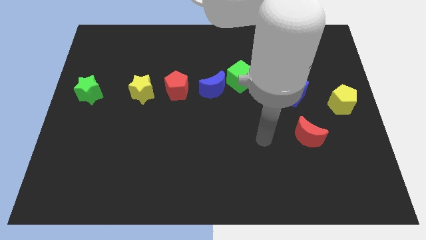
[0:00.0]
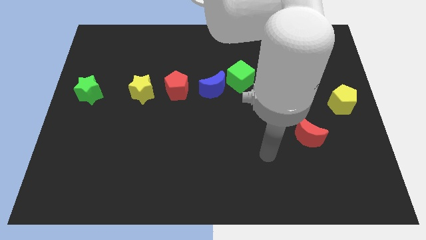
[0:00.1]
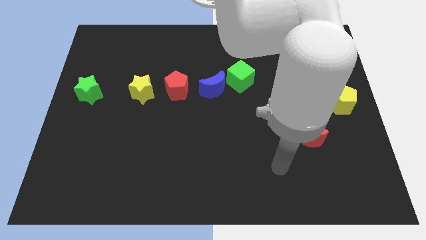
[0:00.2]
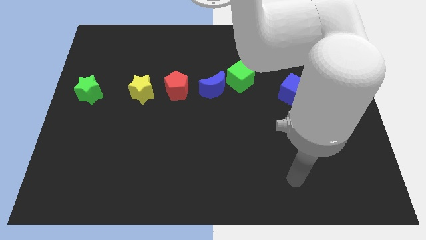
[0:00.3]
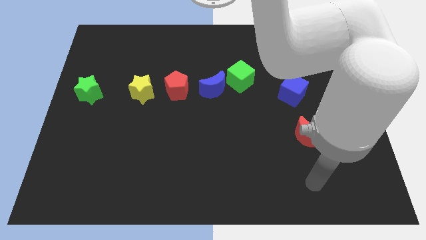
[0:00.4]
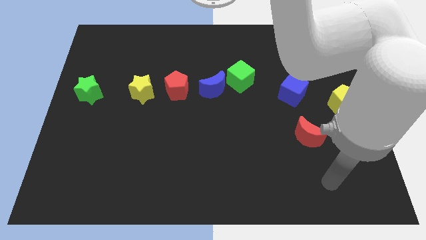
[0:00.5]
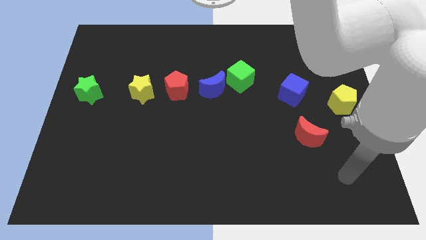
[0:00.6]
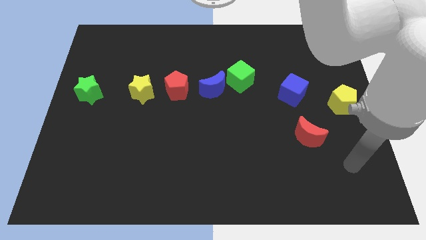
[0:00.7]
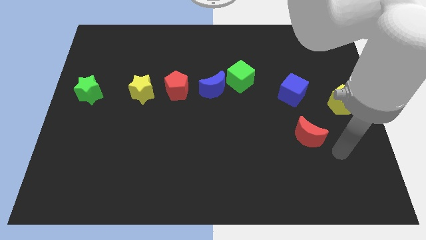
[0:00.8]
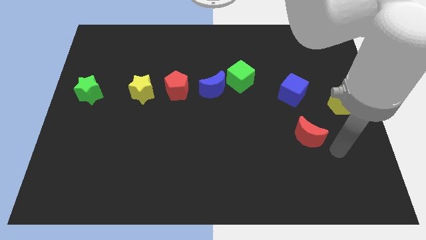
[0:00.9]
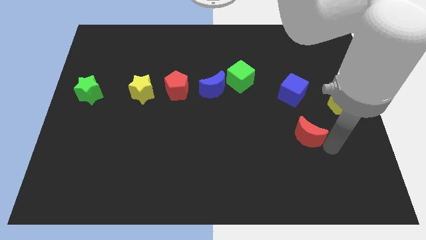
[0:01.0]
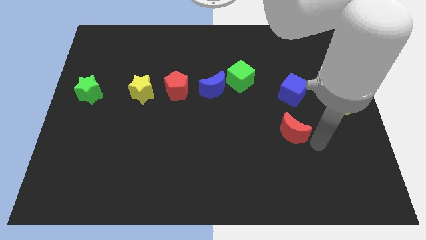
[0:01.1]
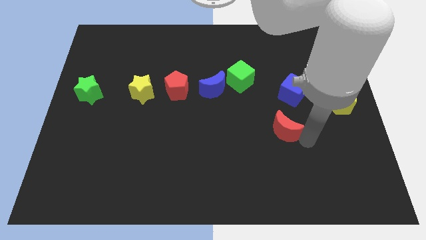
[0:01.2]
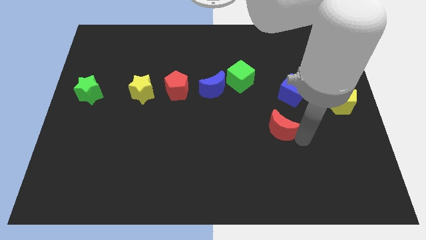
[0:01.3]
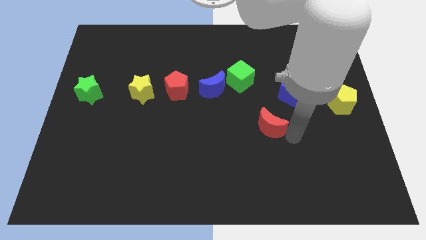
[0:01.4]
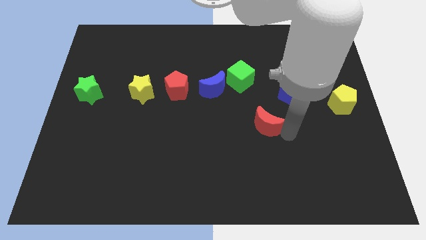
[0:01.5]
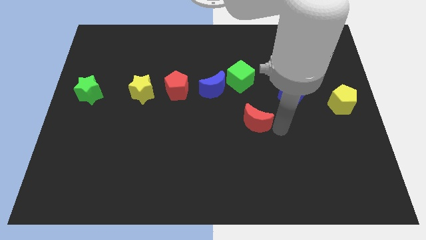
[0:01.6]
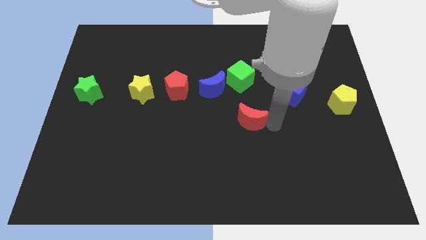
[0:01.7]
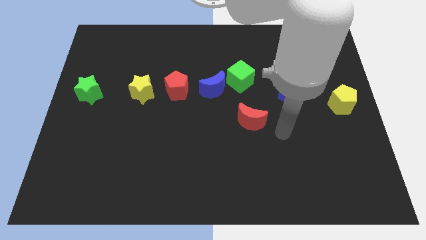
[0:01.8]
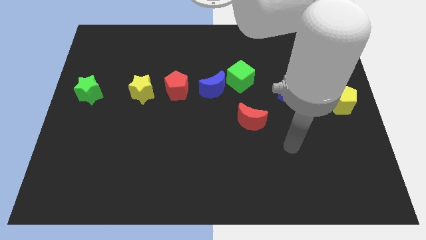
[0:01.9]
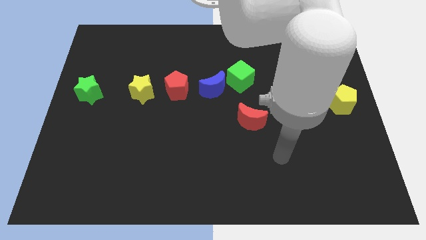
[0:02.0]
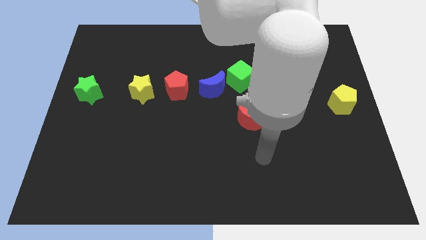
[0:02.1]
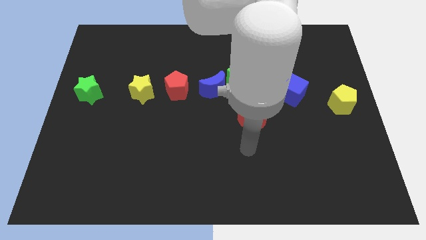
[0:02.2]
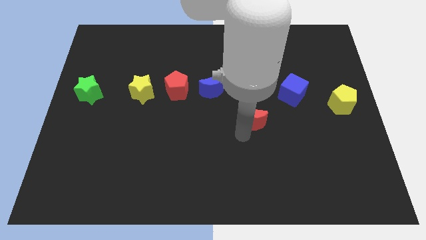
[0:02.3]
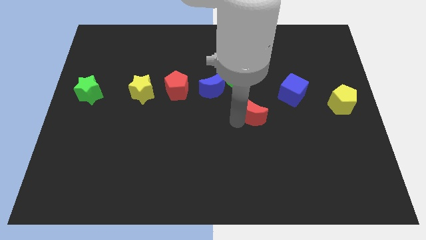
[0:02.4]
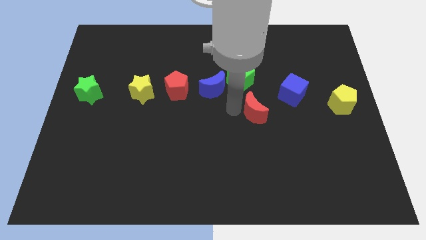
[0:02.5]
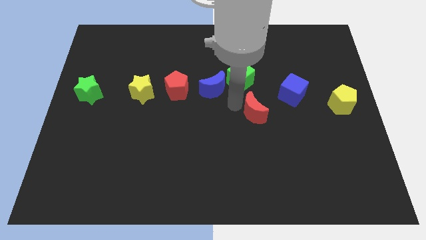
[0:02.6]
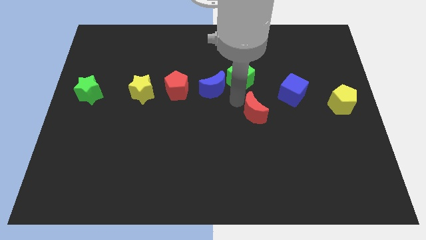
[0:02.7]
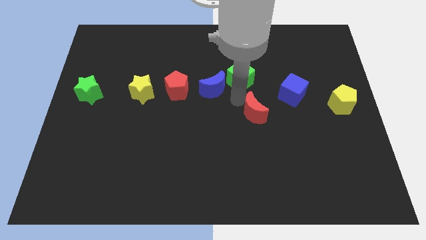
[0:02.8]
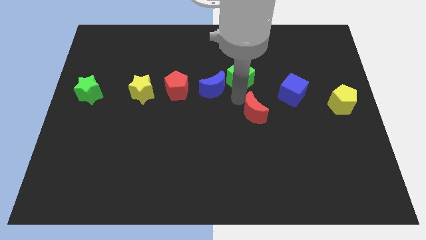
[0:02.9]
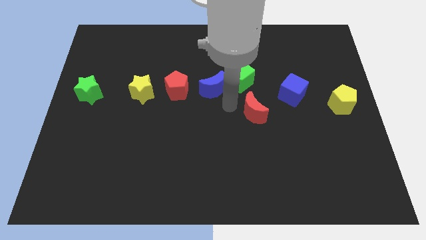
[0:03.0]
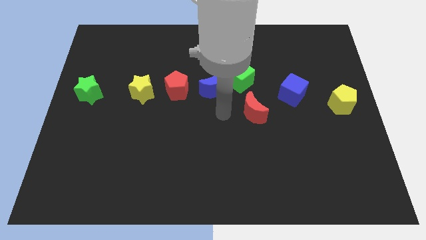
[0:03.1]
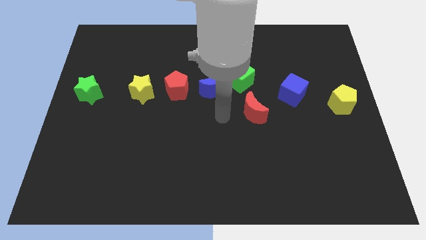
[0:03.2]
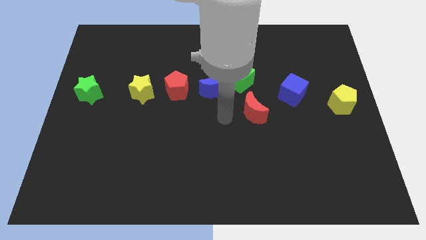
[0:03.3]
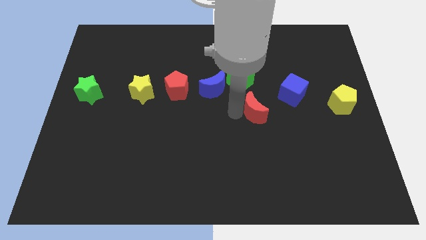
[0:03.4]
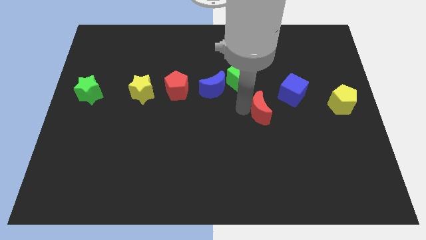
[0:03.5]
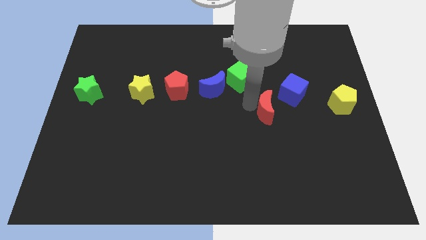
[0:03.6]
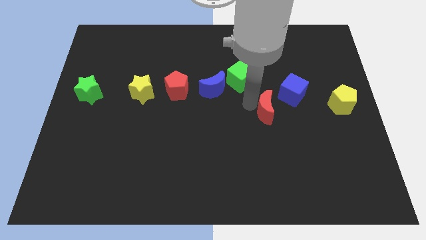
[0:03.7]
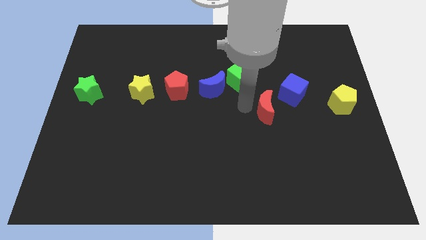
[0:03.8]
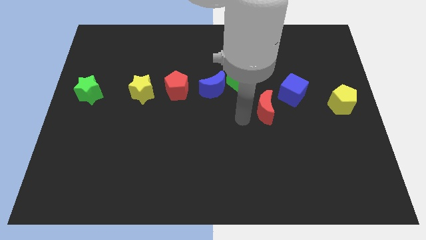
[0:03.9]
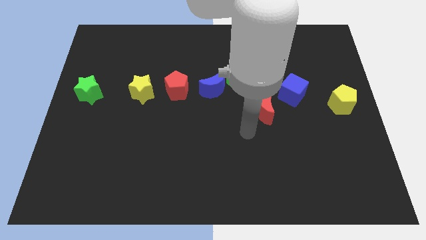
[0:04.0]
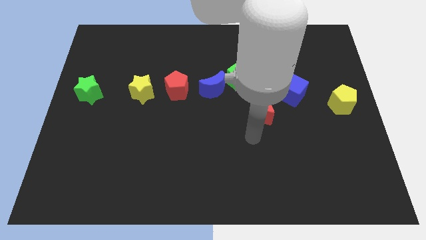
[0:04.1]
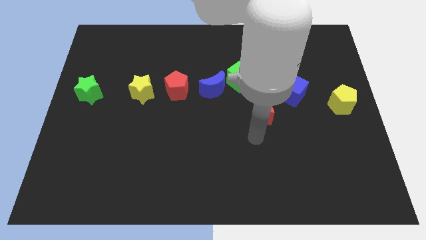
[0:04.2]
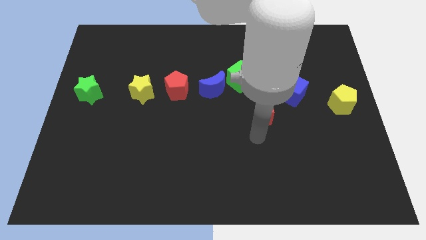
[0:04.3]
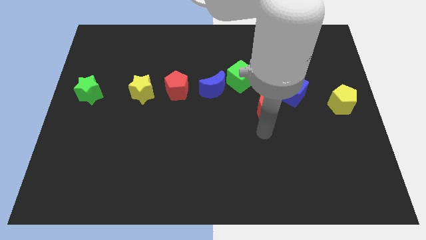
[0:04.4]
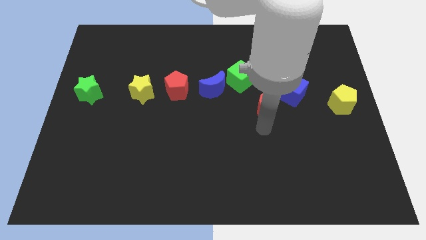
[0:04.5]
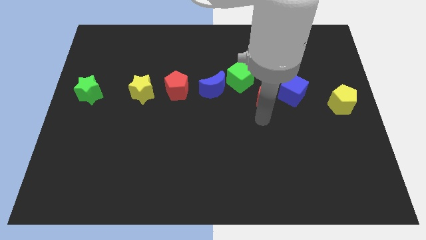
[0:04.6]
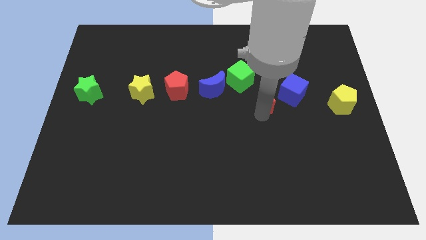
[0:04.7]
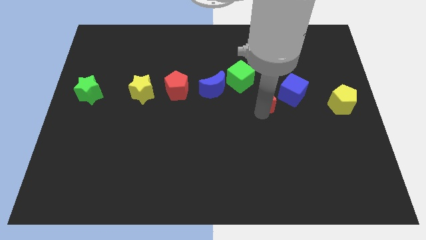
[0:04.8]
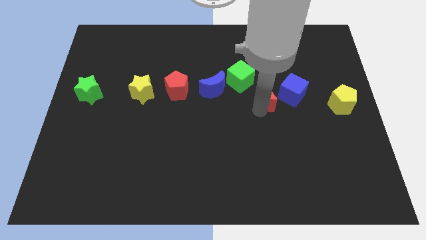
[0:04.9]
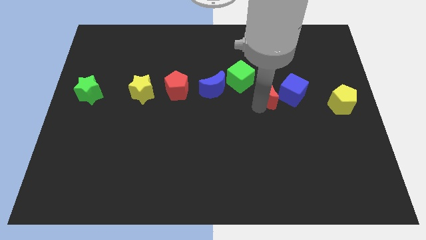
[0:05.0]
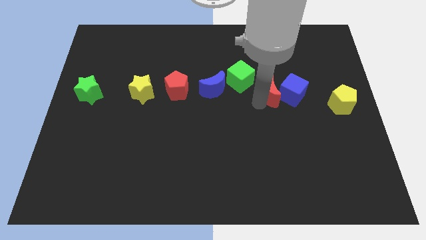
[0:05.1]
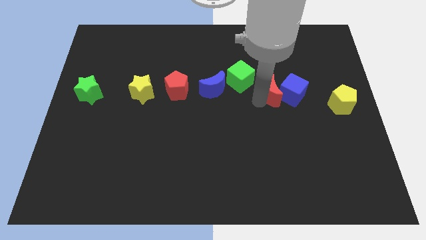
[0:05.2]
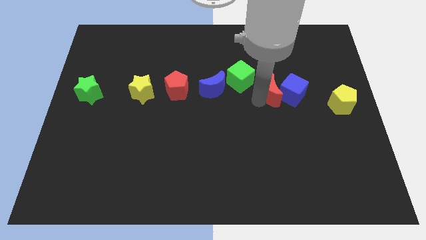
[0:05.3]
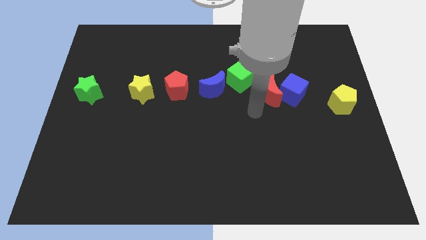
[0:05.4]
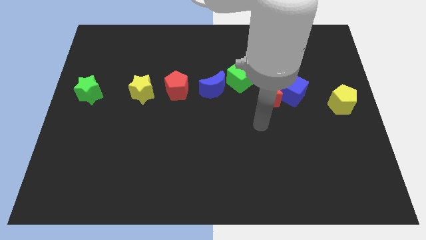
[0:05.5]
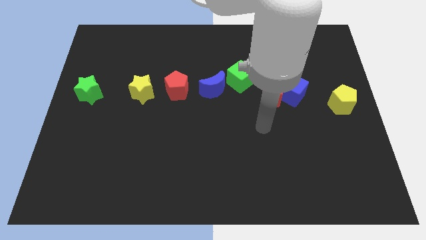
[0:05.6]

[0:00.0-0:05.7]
move the red crescent to the left of the blue cube

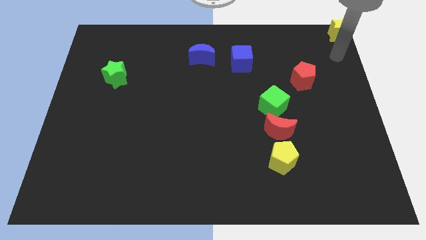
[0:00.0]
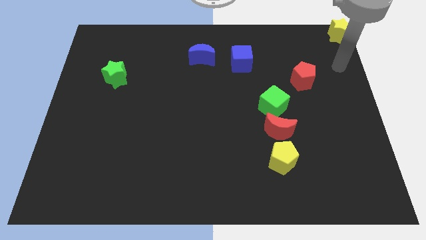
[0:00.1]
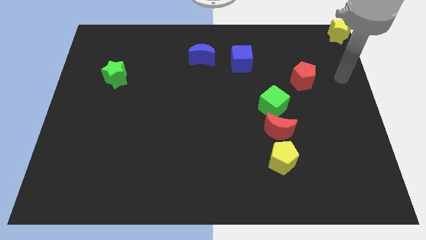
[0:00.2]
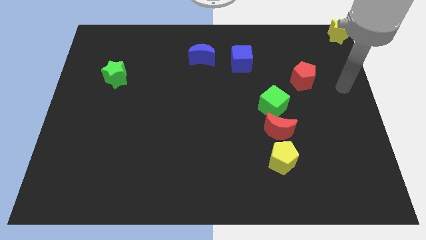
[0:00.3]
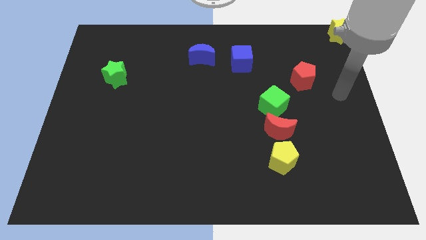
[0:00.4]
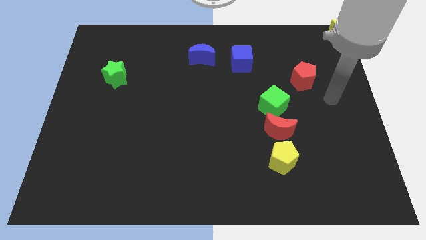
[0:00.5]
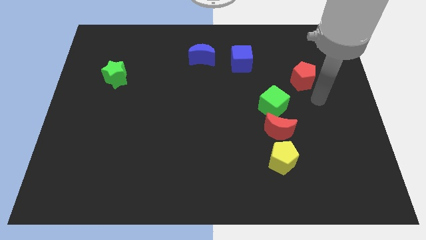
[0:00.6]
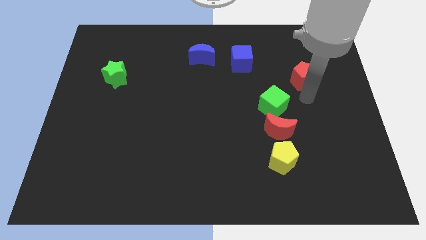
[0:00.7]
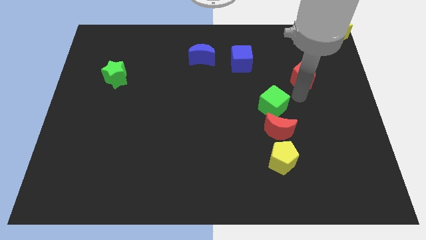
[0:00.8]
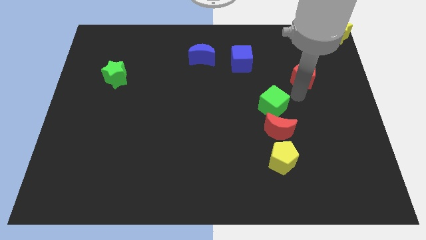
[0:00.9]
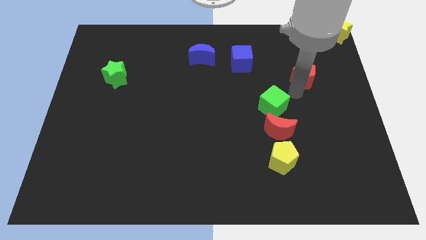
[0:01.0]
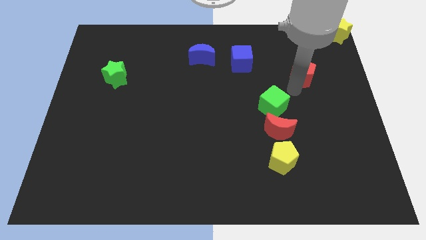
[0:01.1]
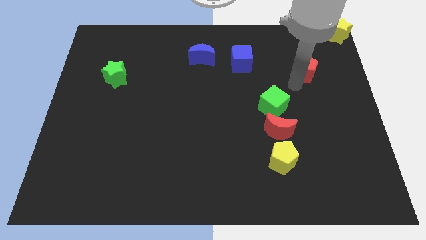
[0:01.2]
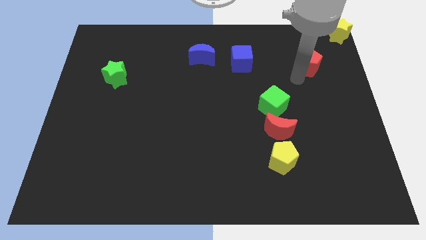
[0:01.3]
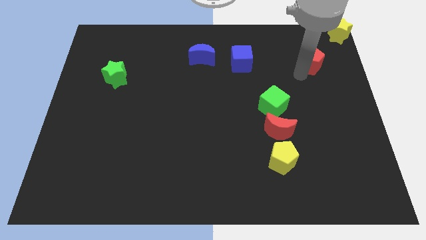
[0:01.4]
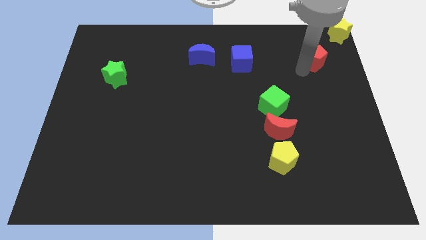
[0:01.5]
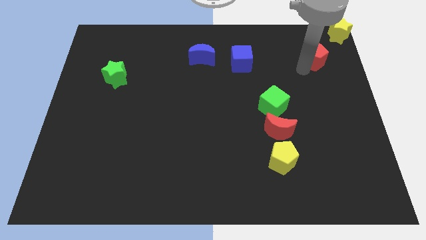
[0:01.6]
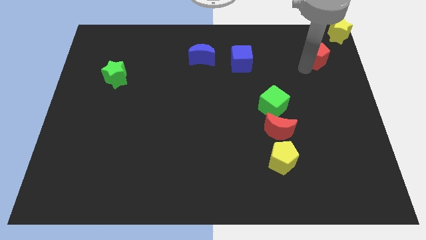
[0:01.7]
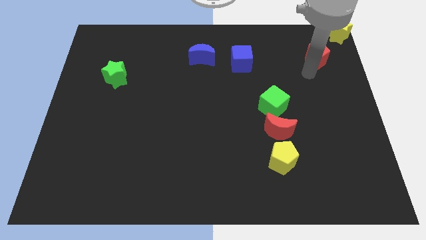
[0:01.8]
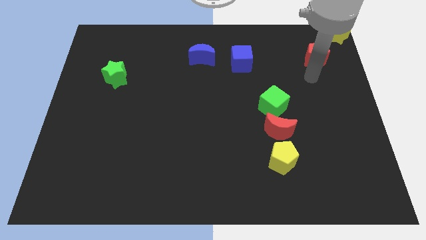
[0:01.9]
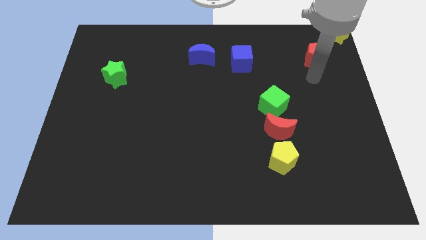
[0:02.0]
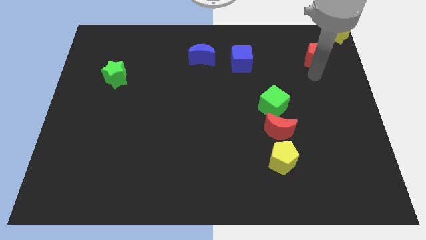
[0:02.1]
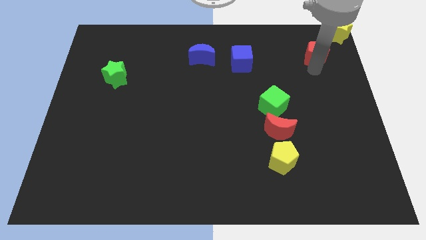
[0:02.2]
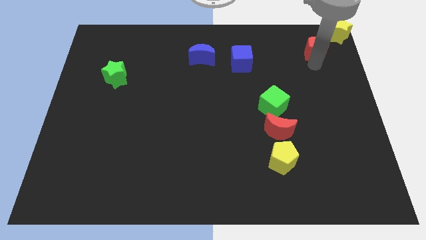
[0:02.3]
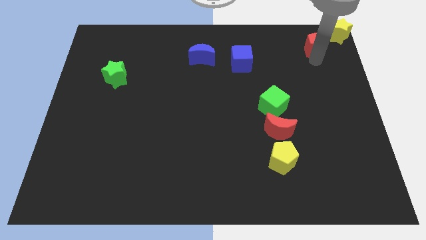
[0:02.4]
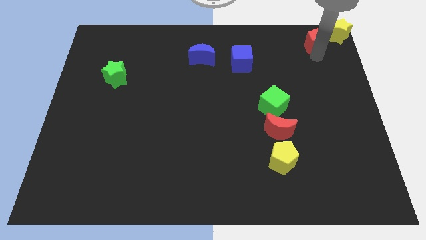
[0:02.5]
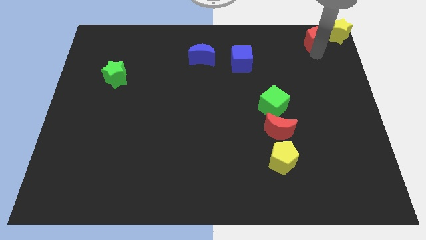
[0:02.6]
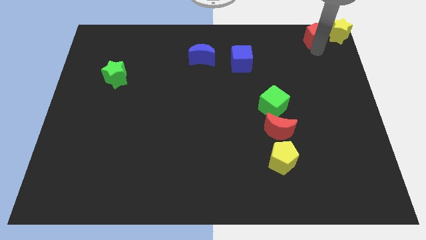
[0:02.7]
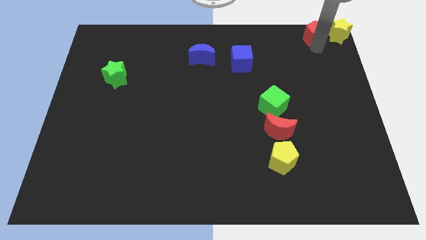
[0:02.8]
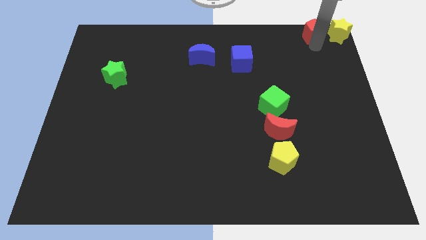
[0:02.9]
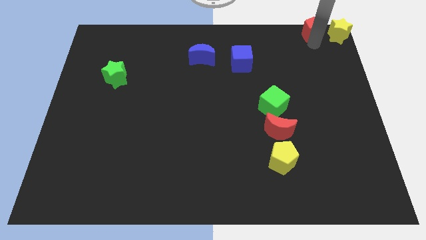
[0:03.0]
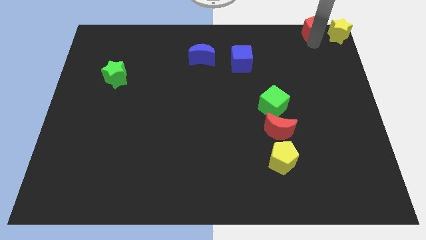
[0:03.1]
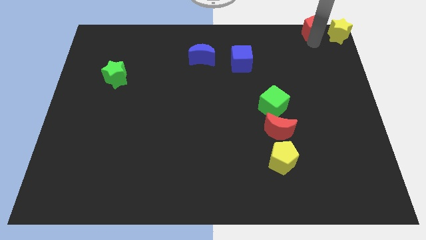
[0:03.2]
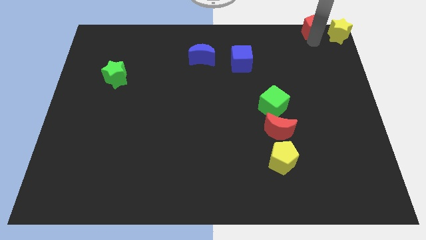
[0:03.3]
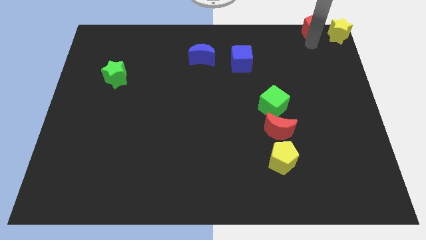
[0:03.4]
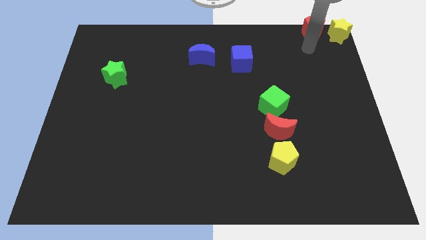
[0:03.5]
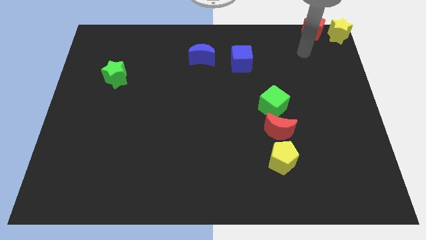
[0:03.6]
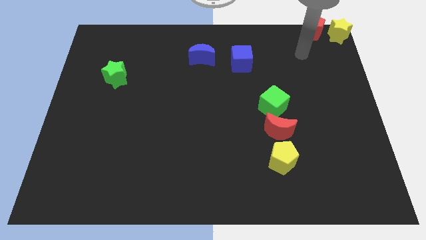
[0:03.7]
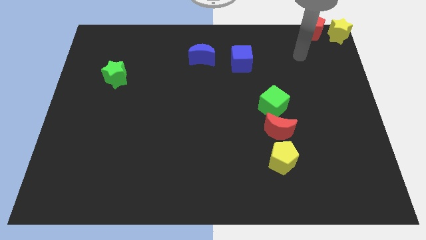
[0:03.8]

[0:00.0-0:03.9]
move the red pentagon to the left side of the yellow star
